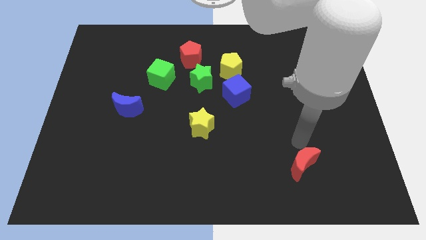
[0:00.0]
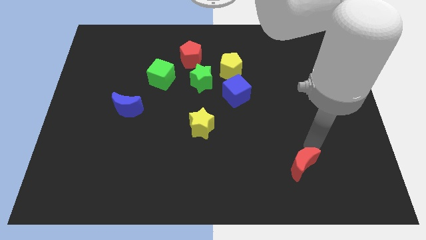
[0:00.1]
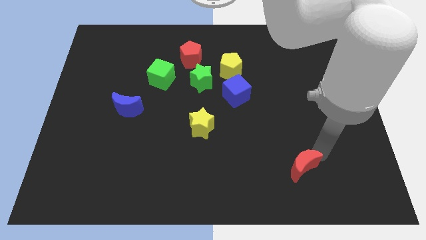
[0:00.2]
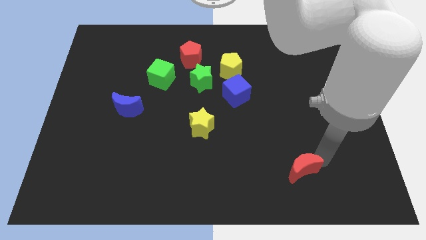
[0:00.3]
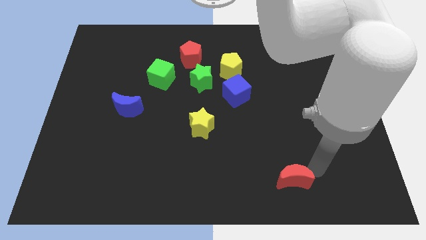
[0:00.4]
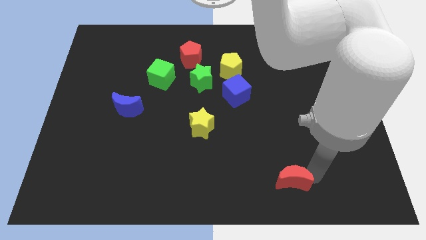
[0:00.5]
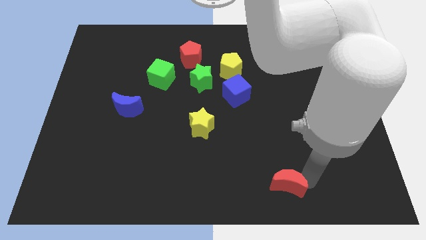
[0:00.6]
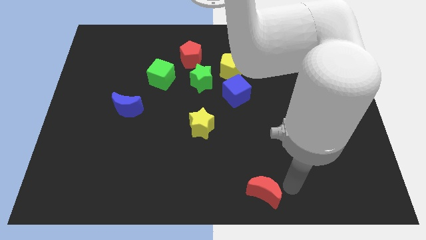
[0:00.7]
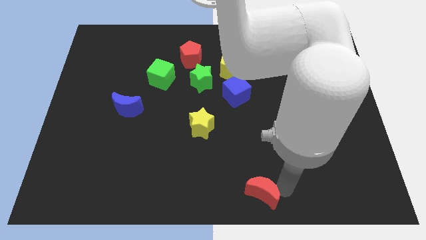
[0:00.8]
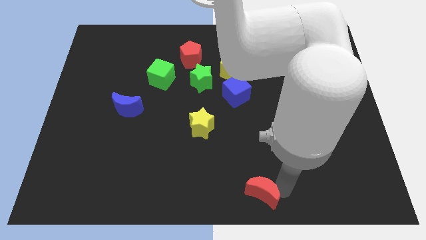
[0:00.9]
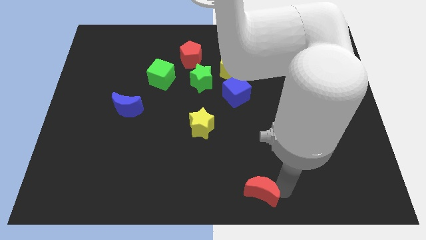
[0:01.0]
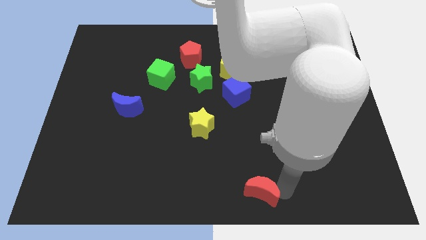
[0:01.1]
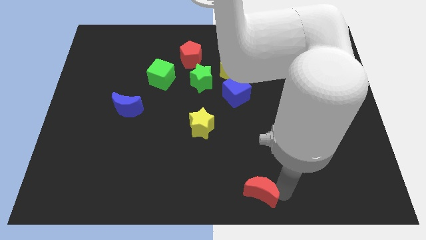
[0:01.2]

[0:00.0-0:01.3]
move the red moon to the bottom center

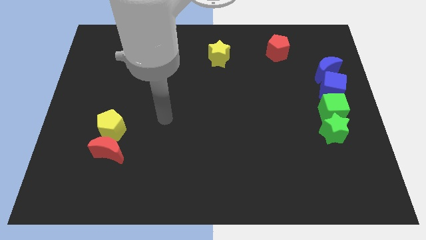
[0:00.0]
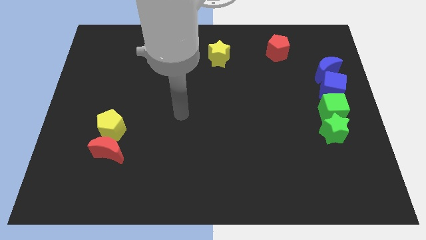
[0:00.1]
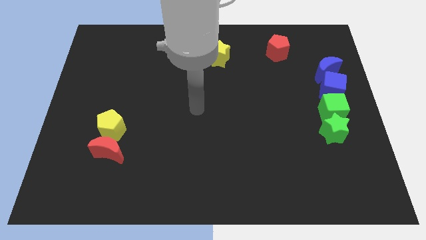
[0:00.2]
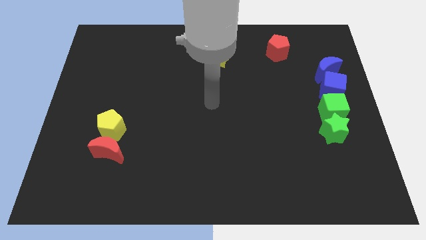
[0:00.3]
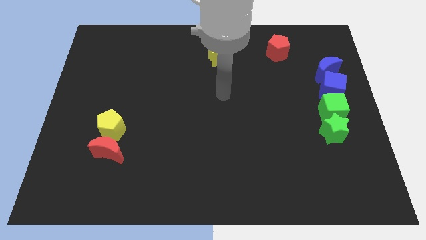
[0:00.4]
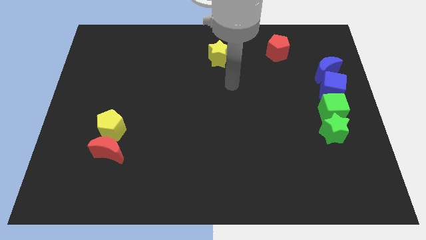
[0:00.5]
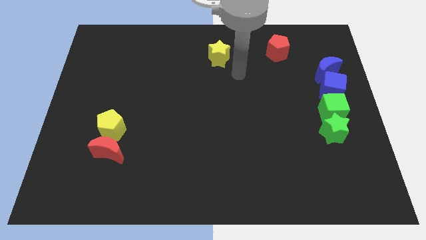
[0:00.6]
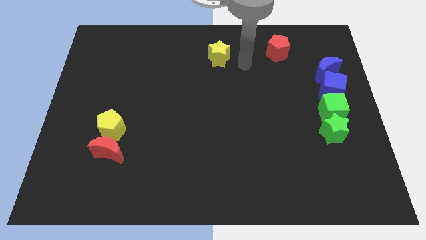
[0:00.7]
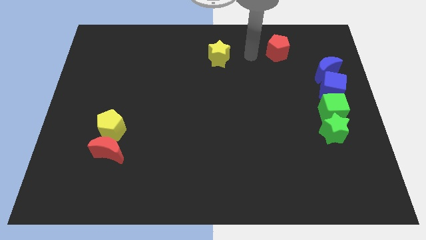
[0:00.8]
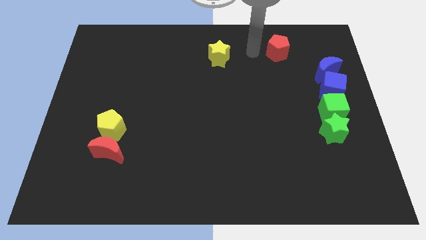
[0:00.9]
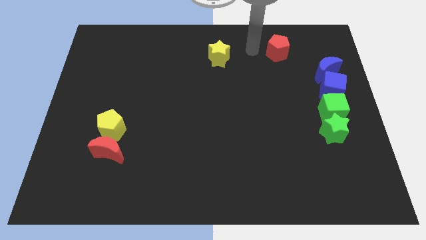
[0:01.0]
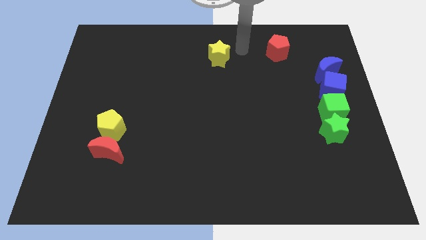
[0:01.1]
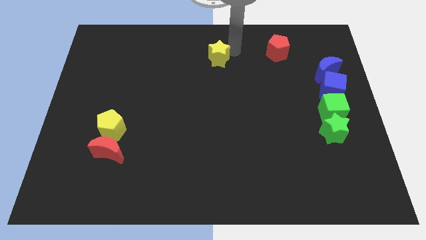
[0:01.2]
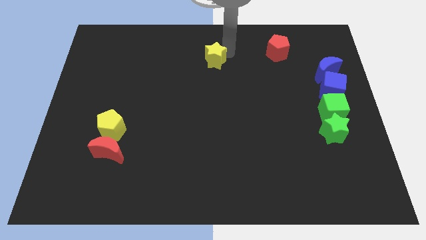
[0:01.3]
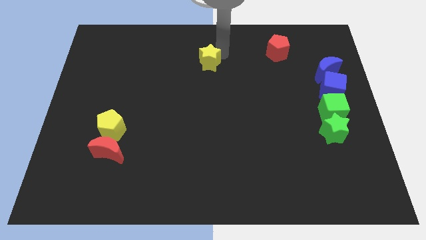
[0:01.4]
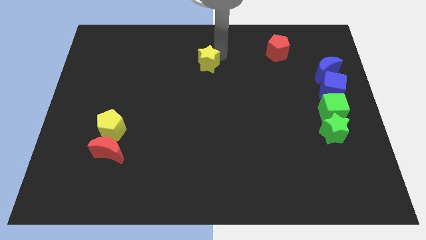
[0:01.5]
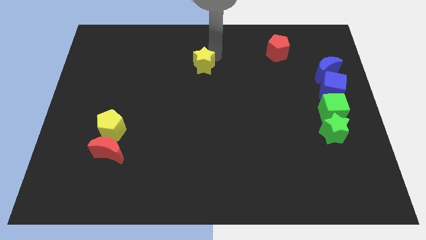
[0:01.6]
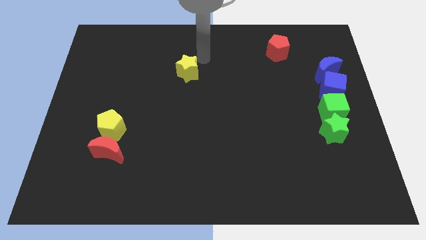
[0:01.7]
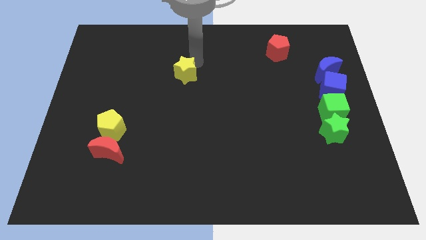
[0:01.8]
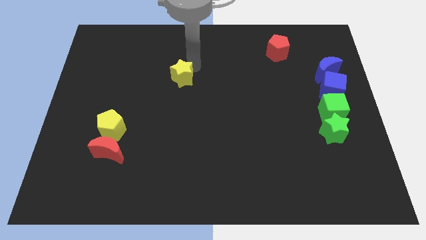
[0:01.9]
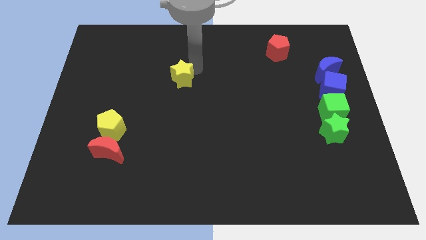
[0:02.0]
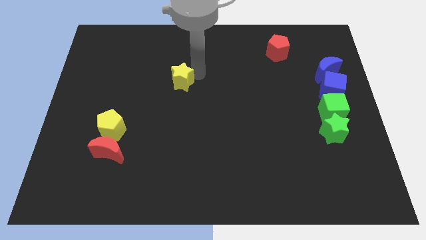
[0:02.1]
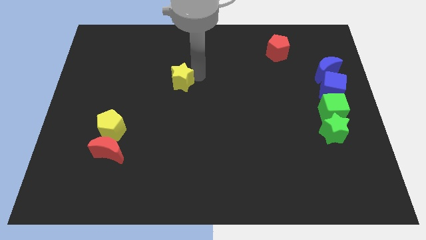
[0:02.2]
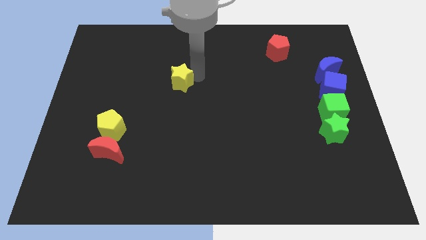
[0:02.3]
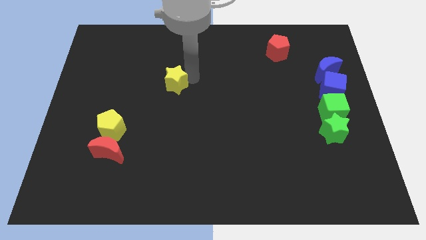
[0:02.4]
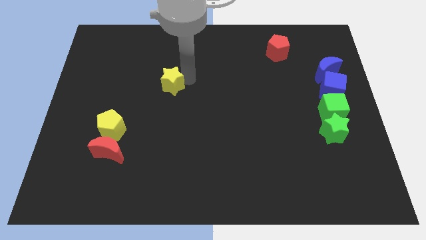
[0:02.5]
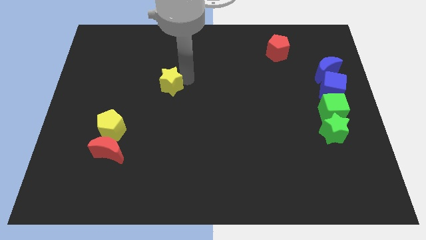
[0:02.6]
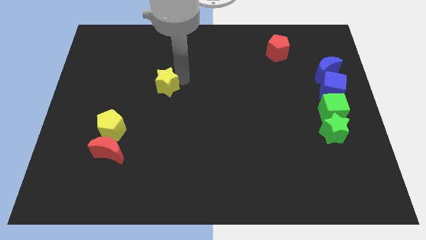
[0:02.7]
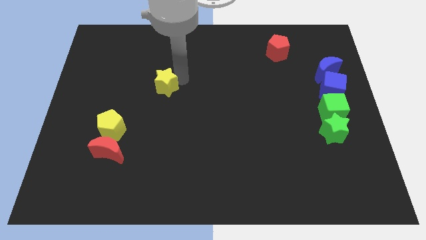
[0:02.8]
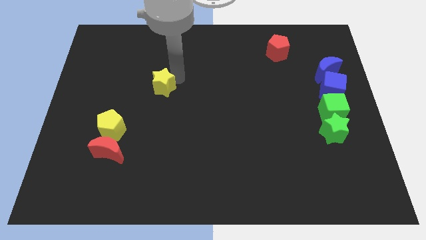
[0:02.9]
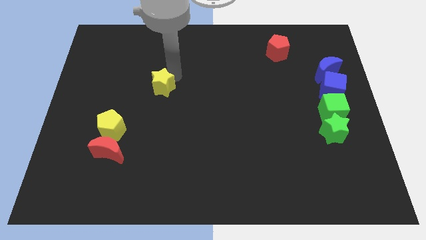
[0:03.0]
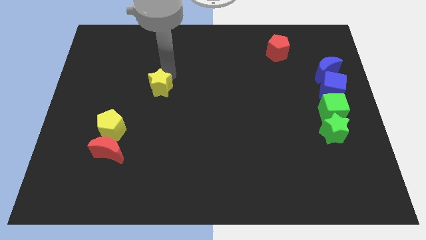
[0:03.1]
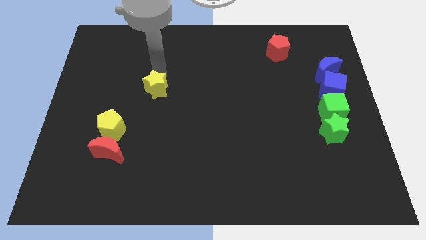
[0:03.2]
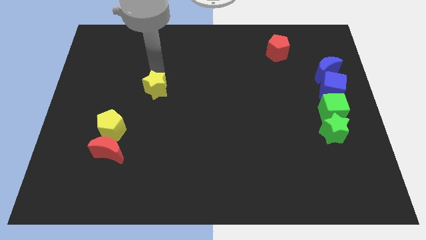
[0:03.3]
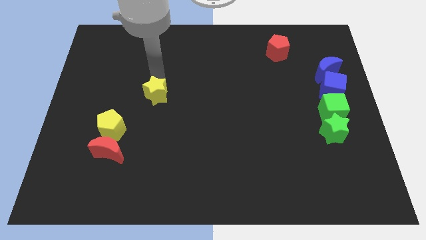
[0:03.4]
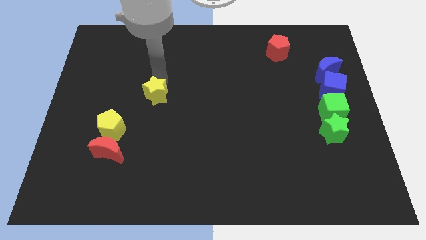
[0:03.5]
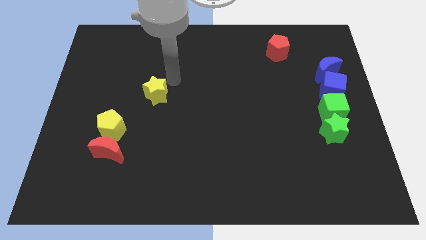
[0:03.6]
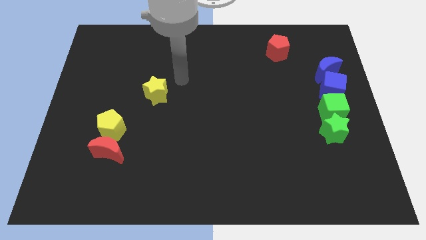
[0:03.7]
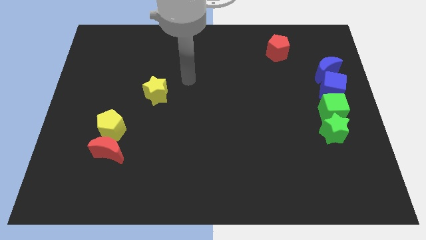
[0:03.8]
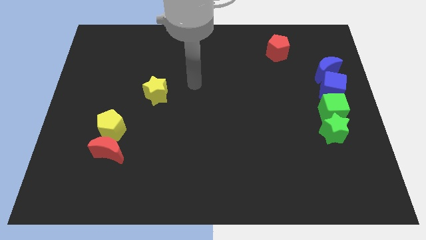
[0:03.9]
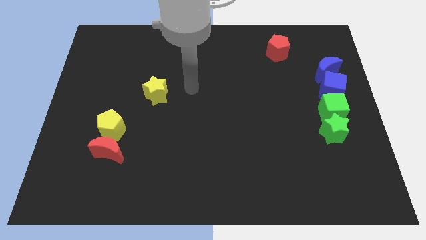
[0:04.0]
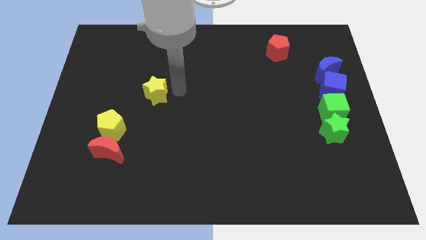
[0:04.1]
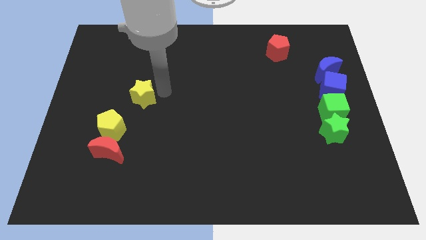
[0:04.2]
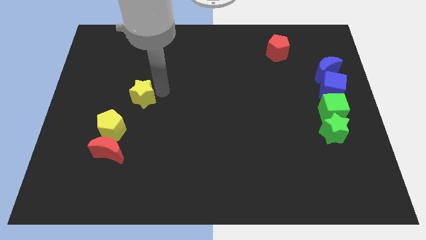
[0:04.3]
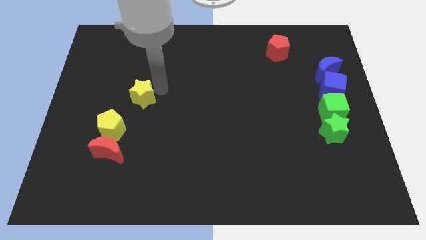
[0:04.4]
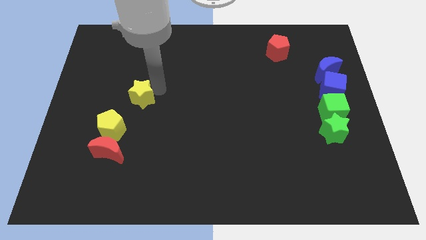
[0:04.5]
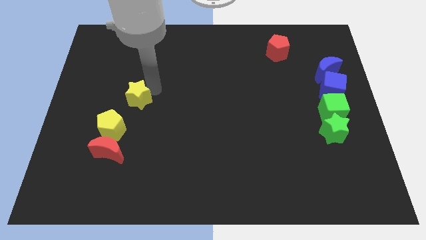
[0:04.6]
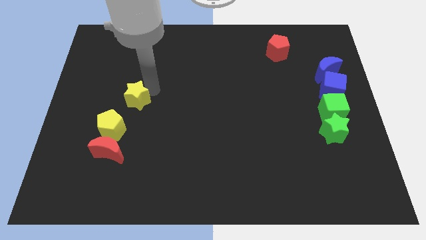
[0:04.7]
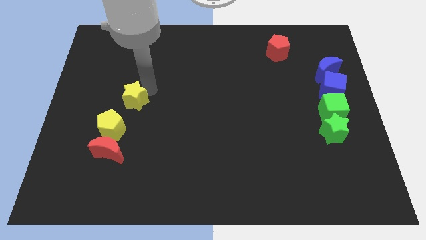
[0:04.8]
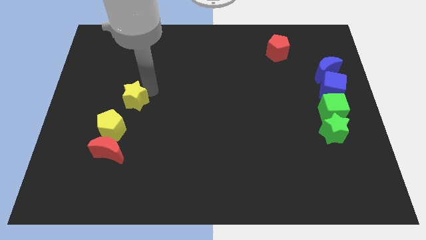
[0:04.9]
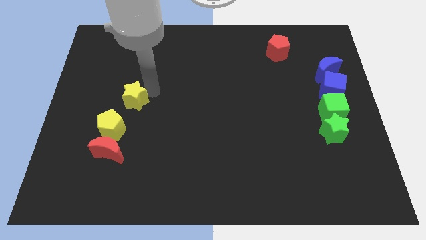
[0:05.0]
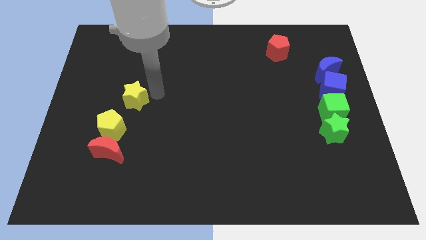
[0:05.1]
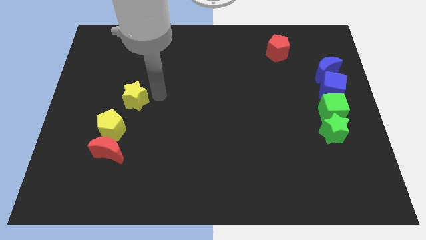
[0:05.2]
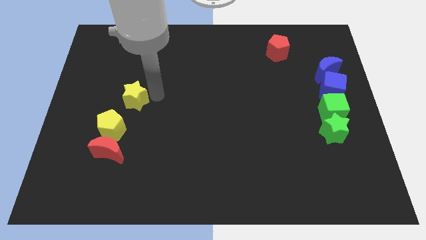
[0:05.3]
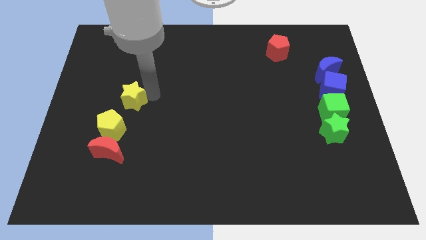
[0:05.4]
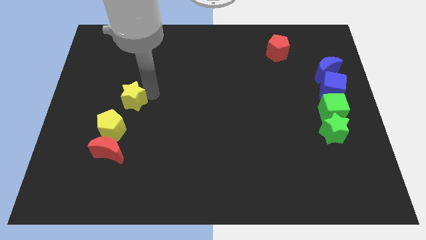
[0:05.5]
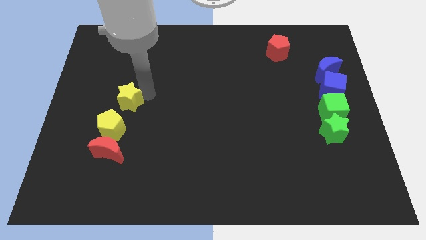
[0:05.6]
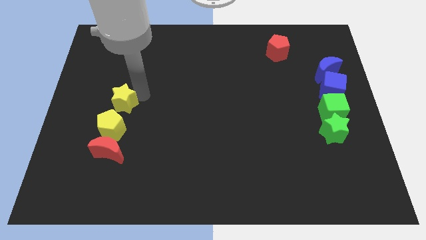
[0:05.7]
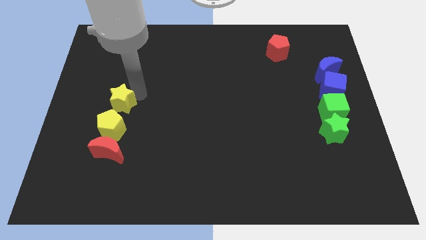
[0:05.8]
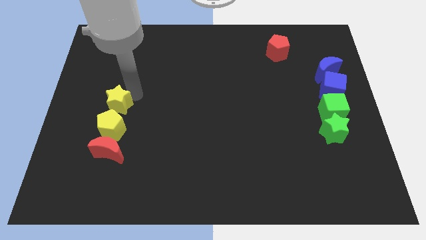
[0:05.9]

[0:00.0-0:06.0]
place the yellow star above the yellow pentagon

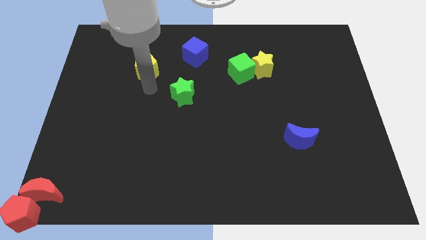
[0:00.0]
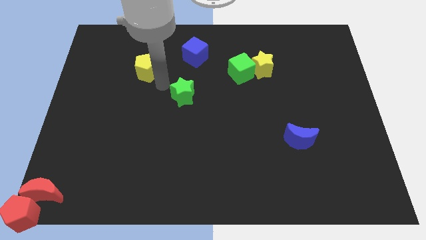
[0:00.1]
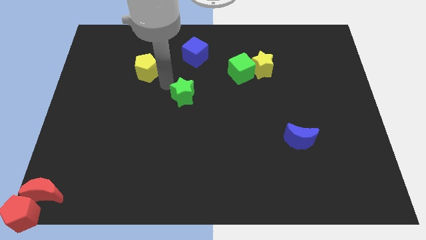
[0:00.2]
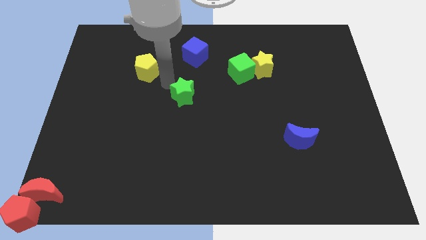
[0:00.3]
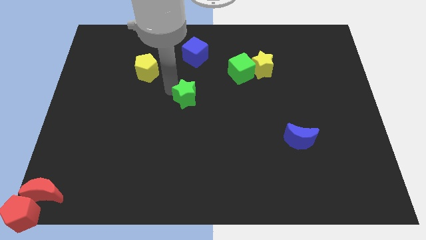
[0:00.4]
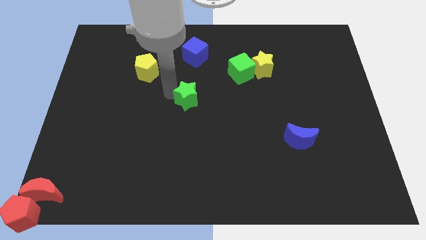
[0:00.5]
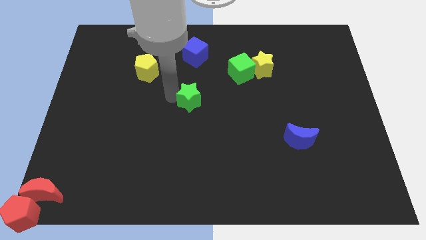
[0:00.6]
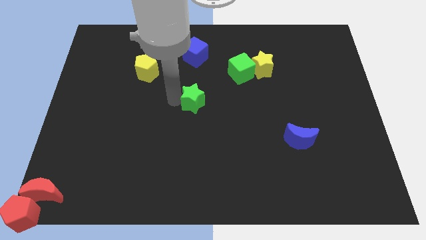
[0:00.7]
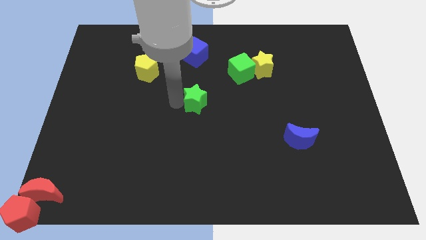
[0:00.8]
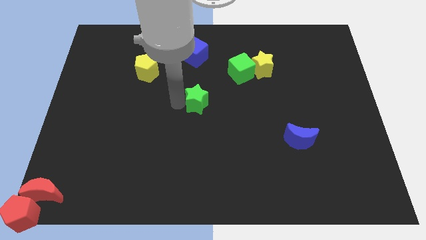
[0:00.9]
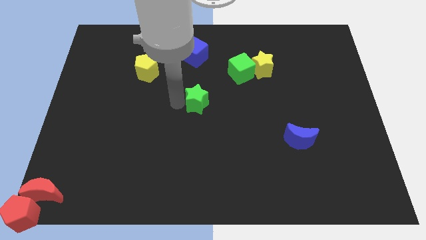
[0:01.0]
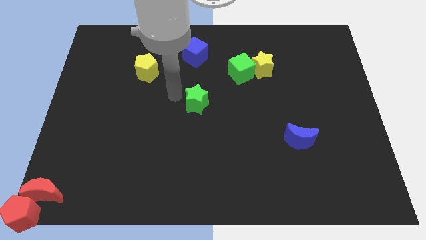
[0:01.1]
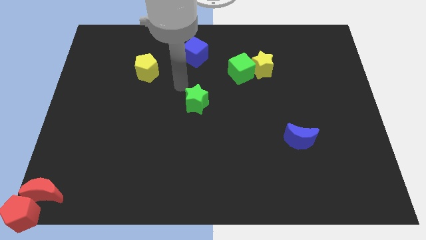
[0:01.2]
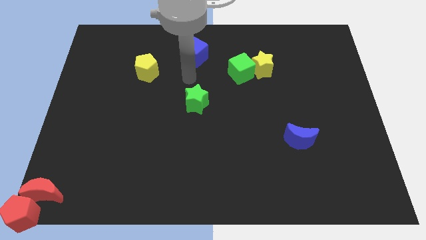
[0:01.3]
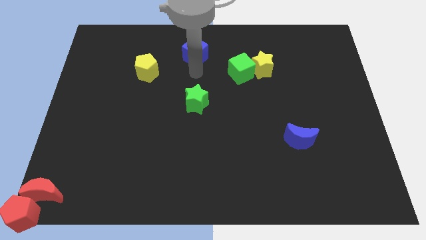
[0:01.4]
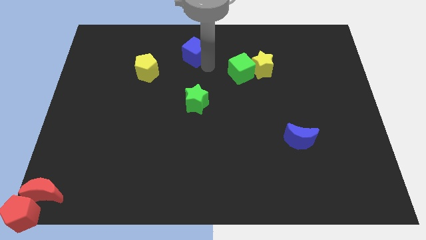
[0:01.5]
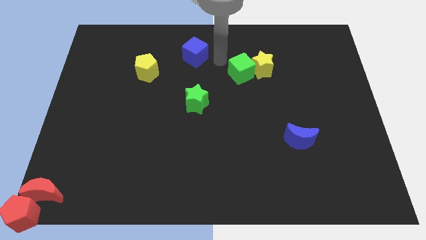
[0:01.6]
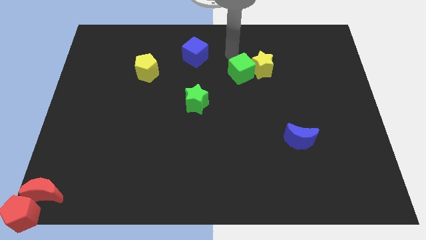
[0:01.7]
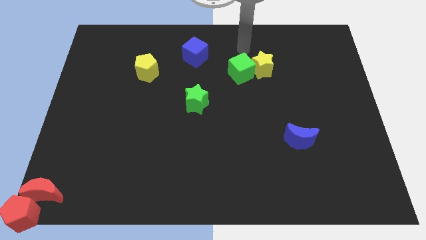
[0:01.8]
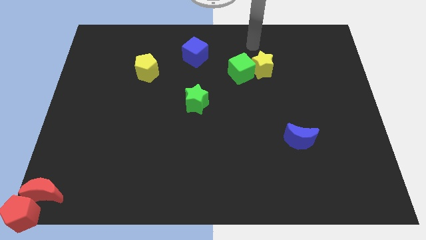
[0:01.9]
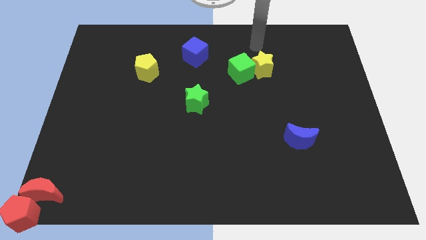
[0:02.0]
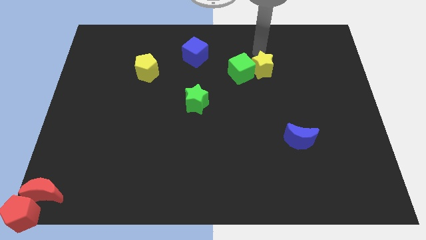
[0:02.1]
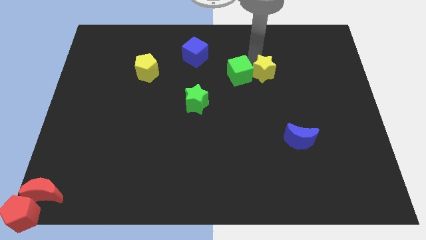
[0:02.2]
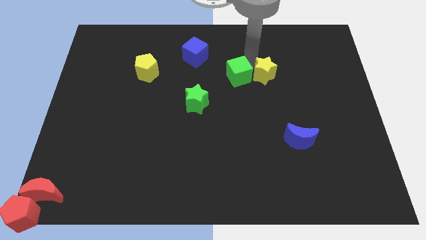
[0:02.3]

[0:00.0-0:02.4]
place your arm in between green cube and yellow star
